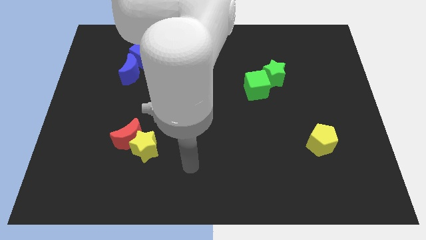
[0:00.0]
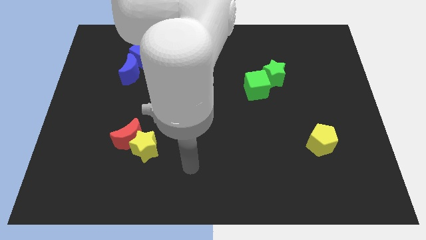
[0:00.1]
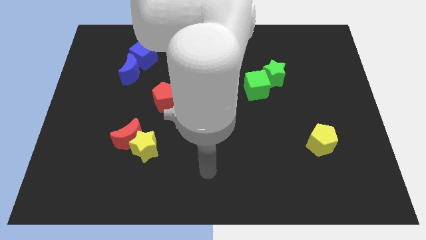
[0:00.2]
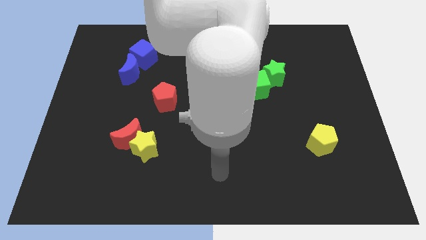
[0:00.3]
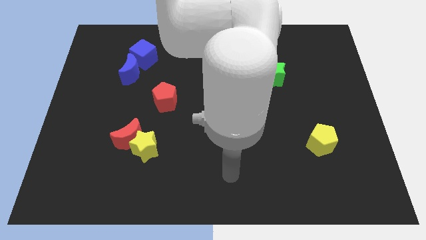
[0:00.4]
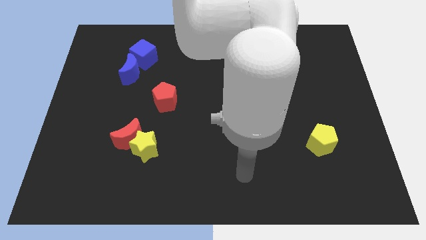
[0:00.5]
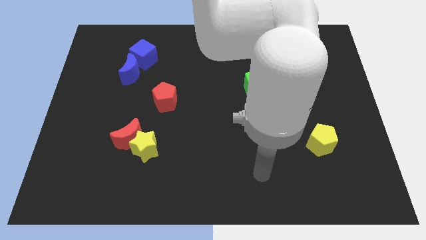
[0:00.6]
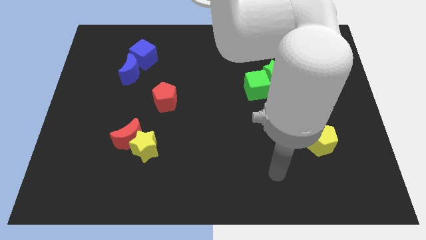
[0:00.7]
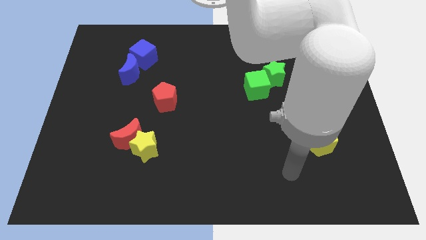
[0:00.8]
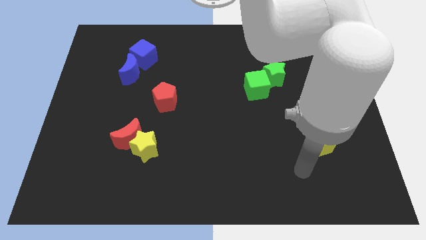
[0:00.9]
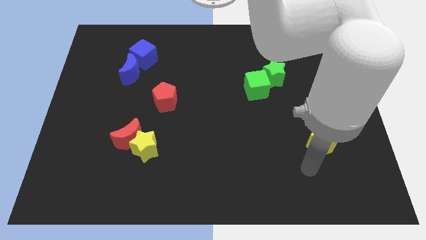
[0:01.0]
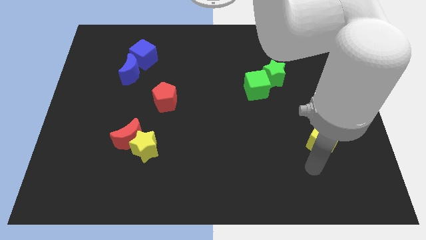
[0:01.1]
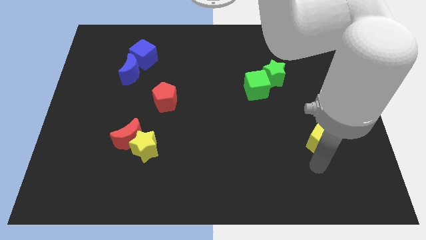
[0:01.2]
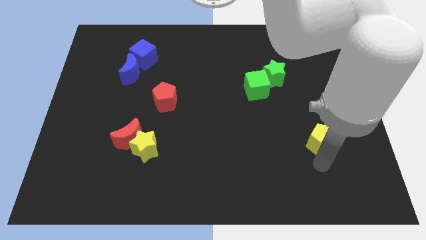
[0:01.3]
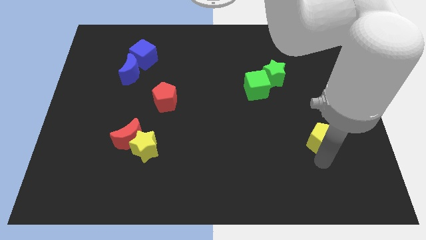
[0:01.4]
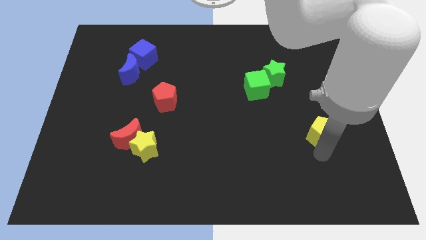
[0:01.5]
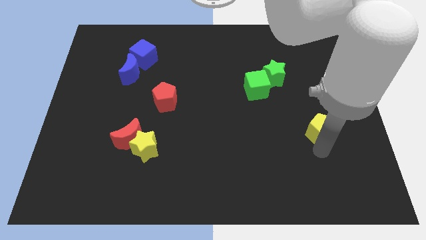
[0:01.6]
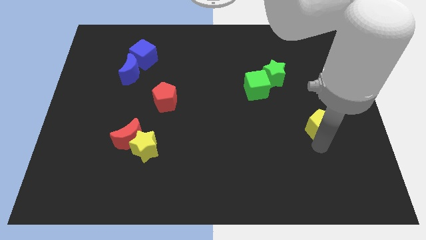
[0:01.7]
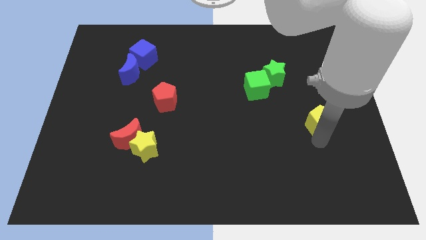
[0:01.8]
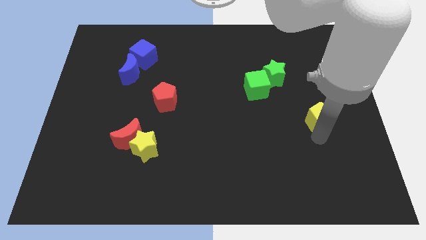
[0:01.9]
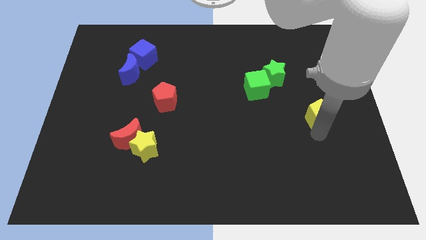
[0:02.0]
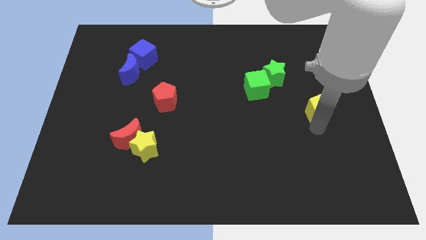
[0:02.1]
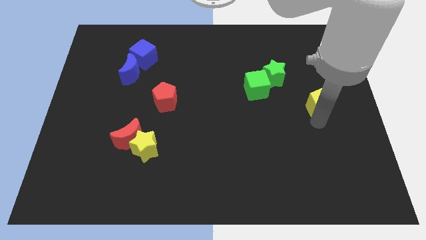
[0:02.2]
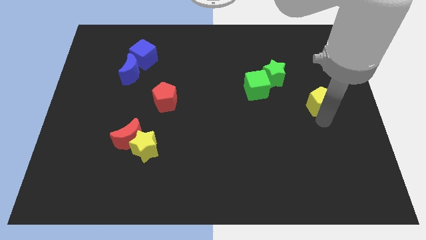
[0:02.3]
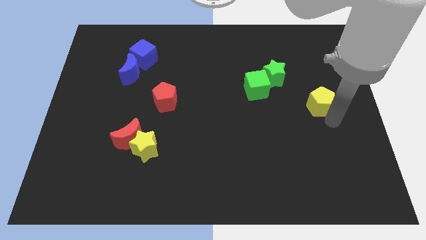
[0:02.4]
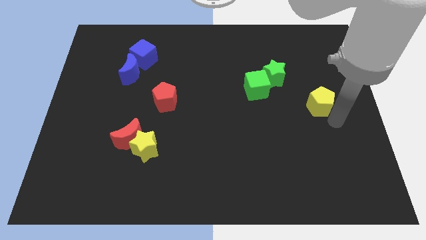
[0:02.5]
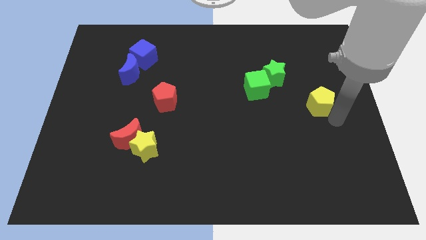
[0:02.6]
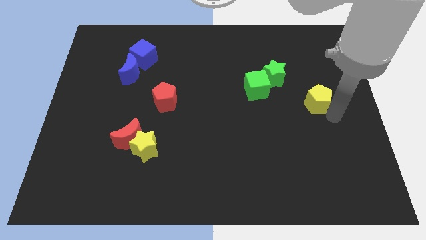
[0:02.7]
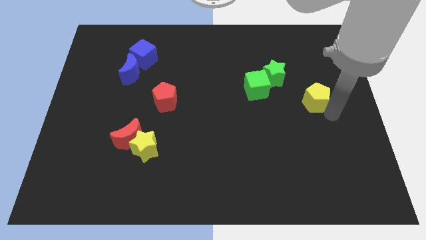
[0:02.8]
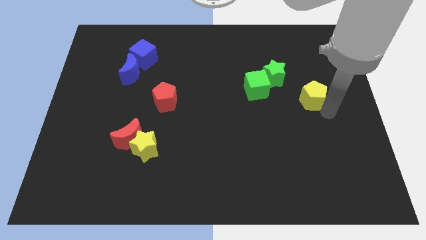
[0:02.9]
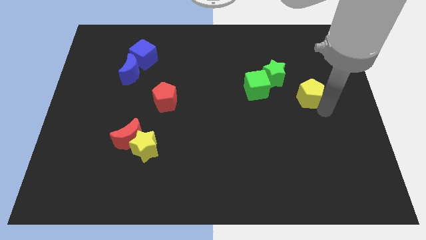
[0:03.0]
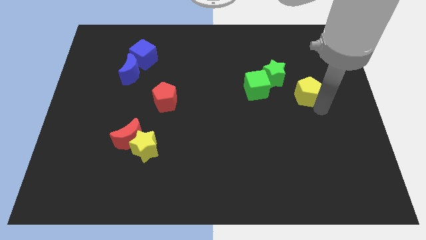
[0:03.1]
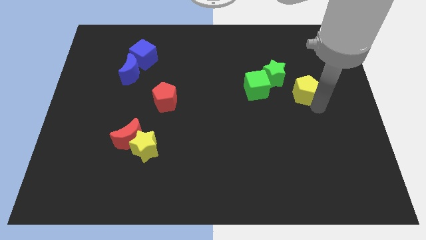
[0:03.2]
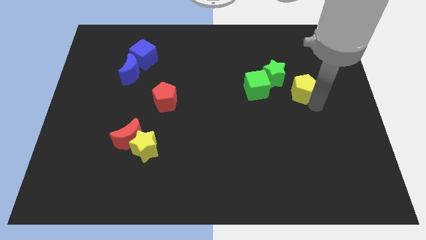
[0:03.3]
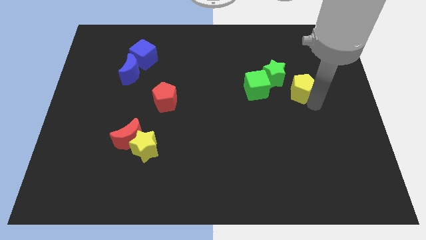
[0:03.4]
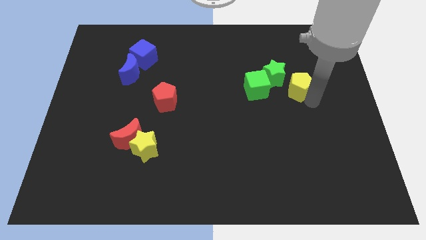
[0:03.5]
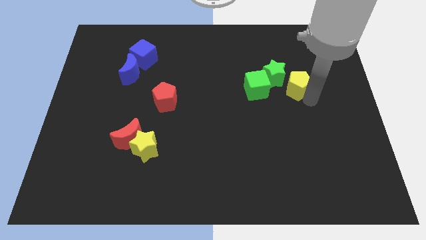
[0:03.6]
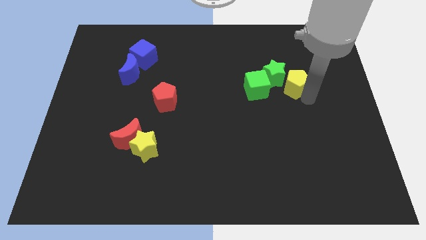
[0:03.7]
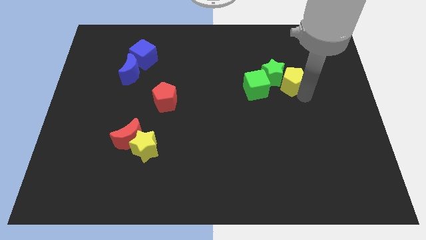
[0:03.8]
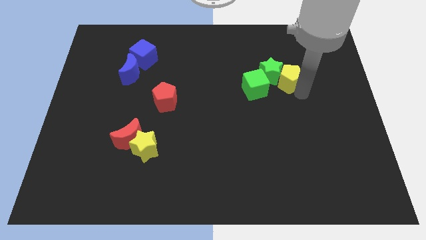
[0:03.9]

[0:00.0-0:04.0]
put the yellow pentagon to the green star

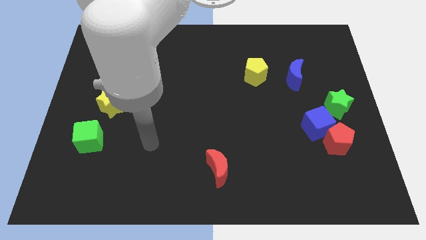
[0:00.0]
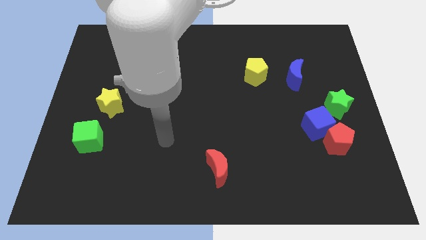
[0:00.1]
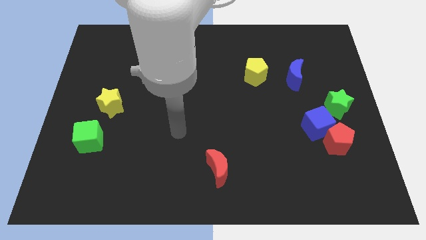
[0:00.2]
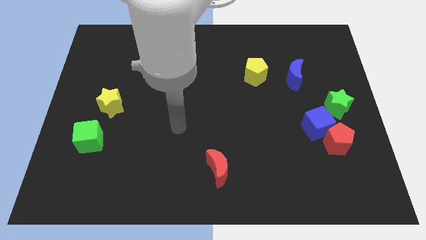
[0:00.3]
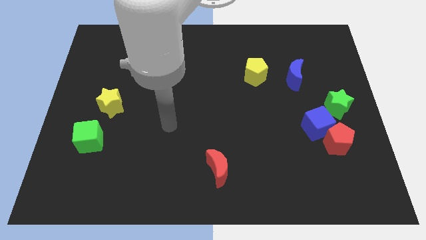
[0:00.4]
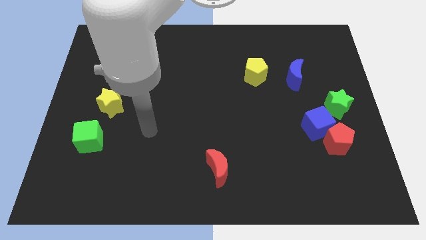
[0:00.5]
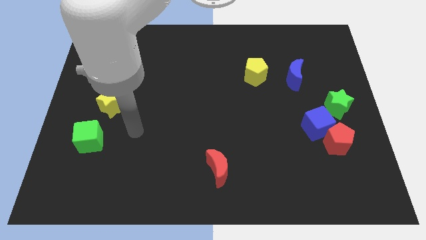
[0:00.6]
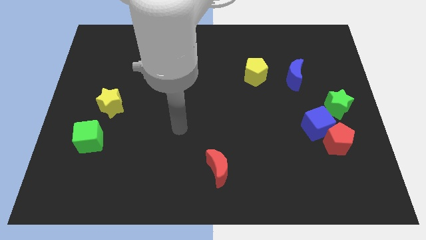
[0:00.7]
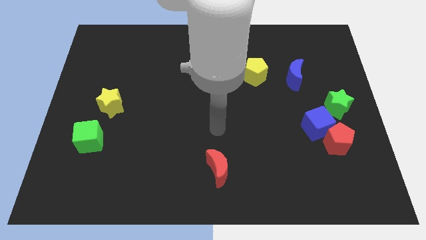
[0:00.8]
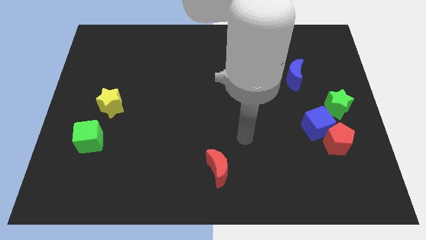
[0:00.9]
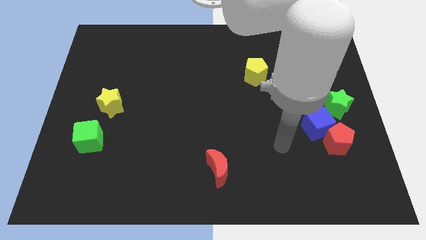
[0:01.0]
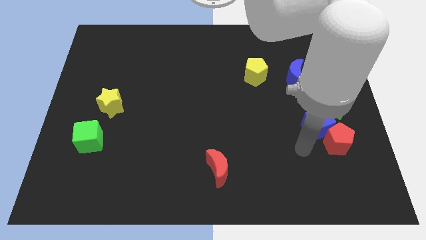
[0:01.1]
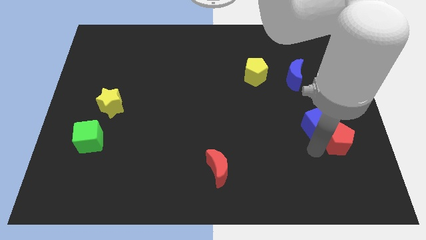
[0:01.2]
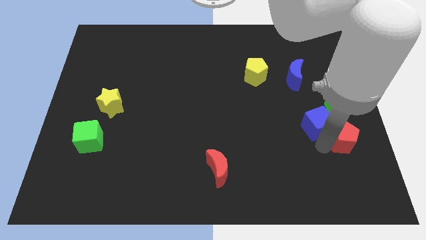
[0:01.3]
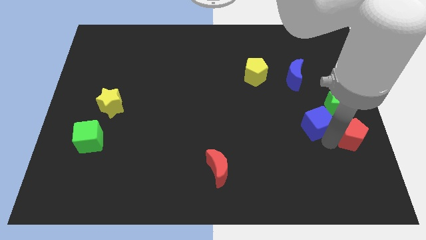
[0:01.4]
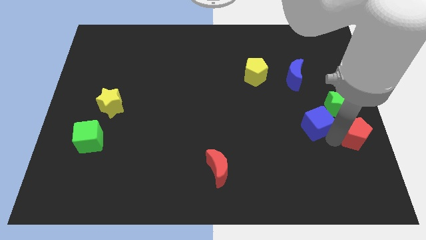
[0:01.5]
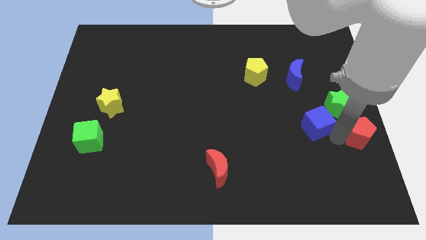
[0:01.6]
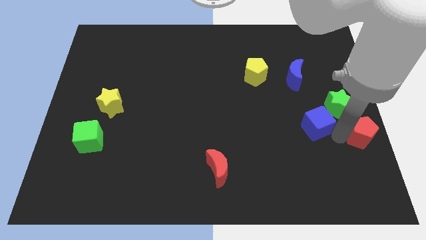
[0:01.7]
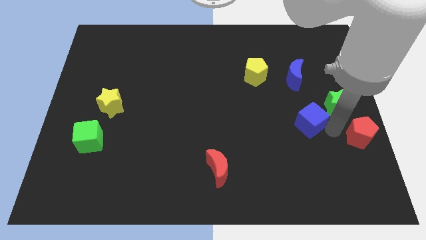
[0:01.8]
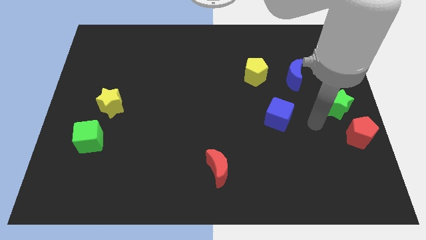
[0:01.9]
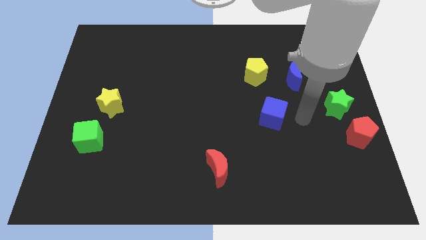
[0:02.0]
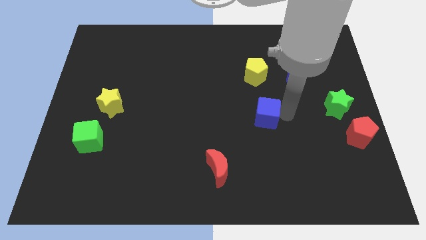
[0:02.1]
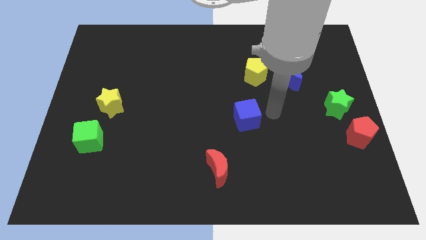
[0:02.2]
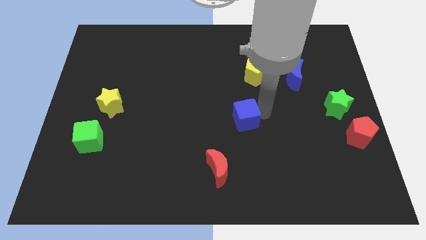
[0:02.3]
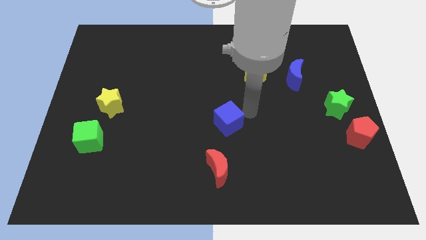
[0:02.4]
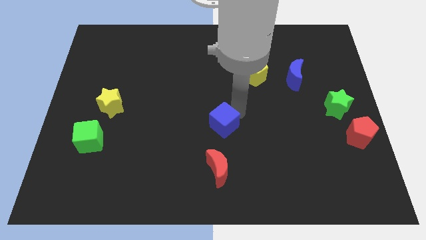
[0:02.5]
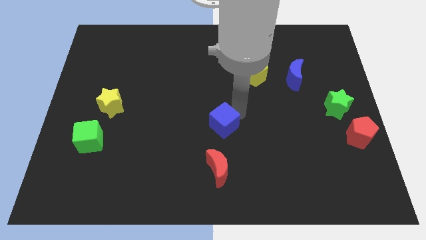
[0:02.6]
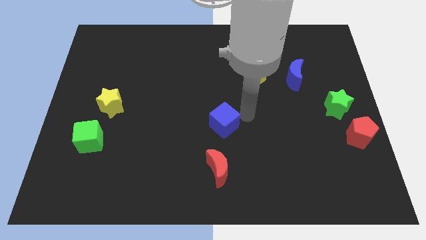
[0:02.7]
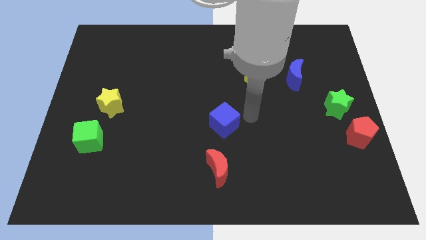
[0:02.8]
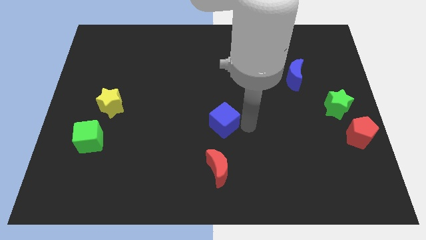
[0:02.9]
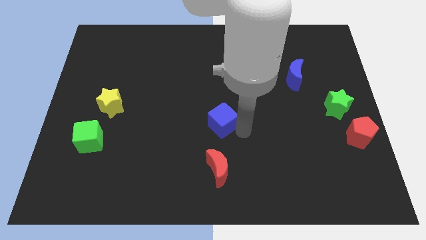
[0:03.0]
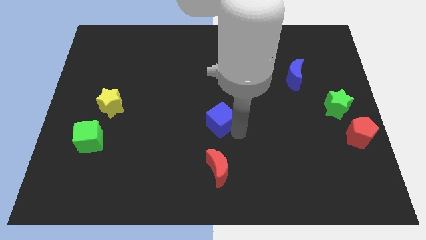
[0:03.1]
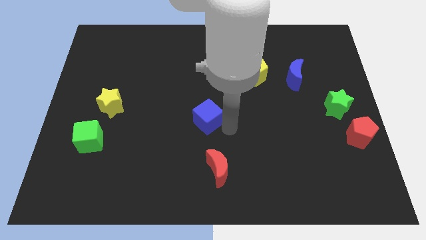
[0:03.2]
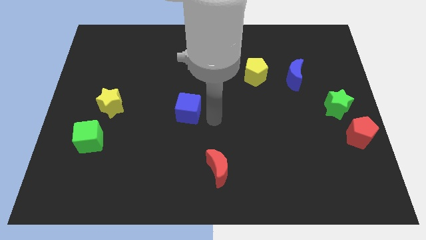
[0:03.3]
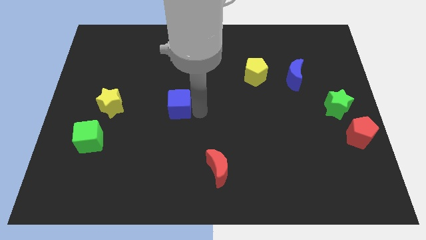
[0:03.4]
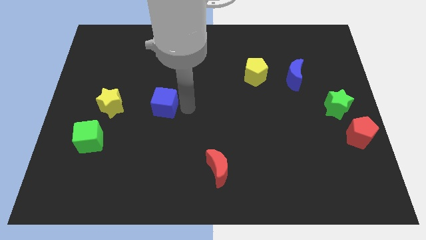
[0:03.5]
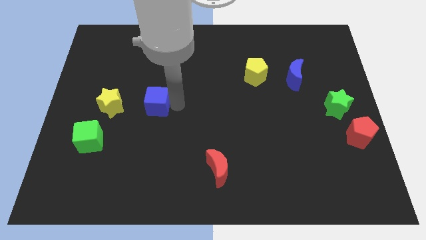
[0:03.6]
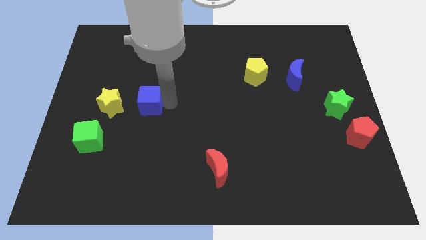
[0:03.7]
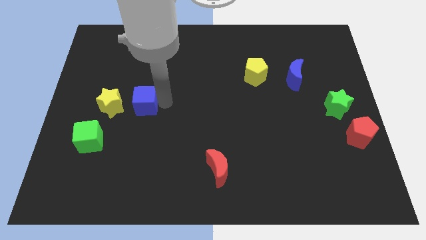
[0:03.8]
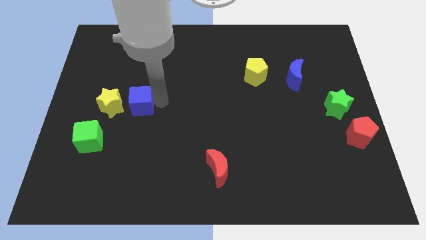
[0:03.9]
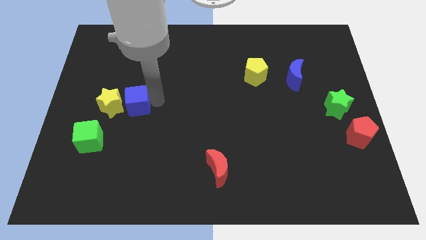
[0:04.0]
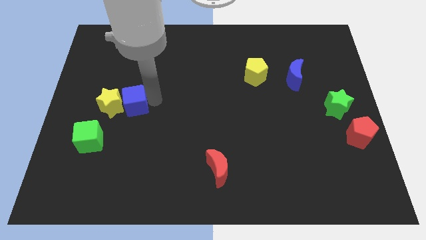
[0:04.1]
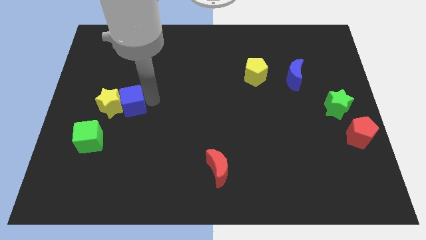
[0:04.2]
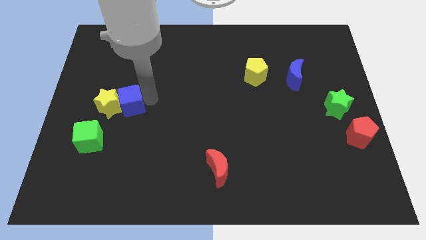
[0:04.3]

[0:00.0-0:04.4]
put the blue cube to the yellow star
